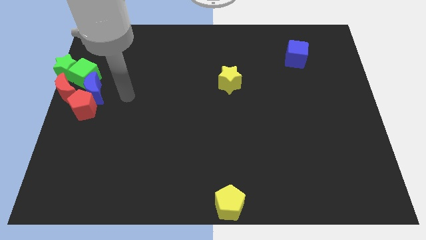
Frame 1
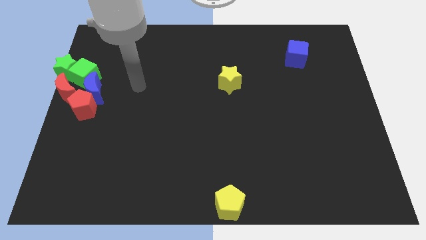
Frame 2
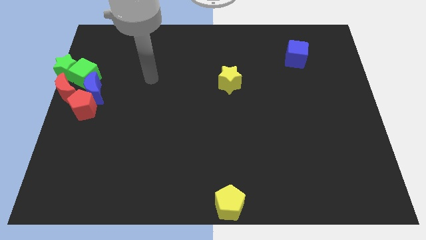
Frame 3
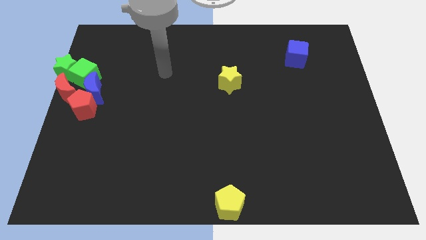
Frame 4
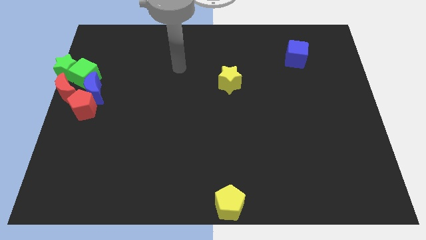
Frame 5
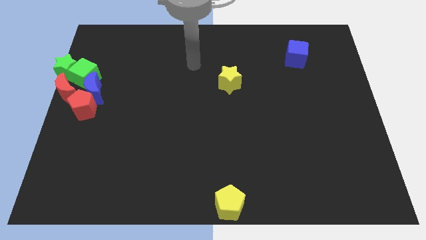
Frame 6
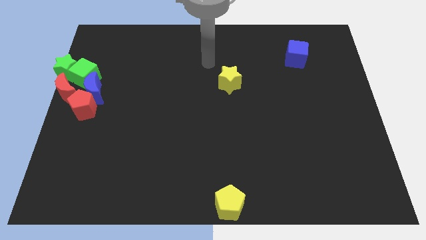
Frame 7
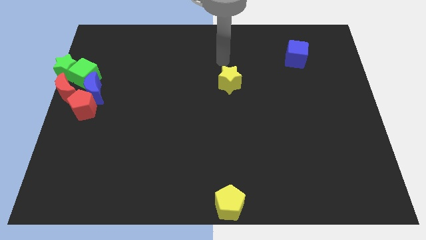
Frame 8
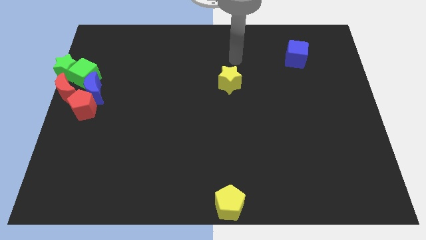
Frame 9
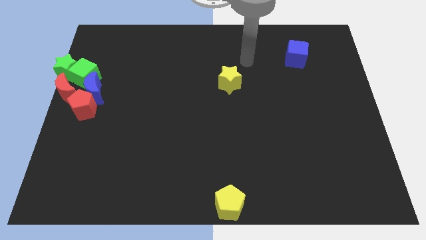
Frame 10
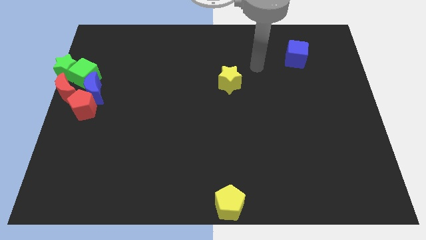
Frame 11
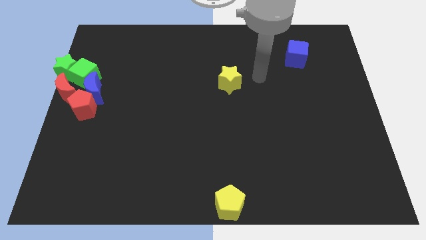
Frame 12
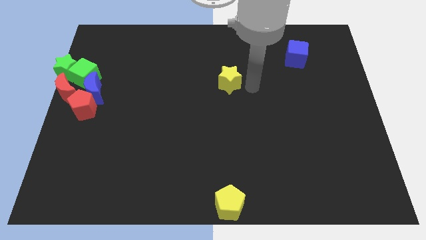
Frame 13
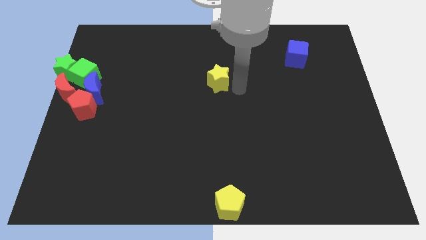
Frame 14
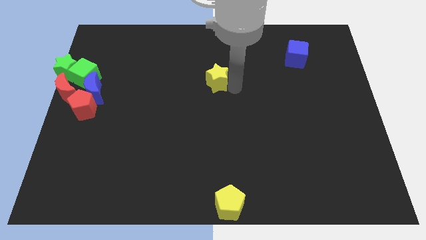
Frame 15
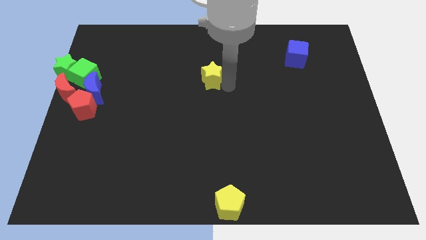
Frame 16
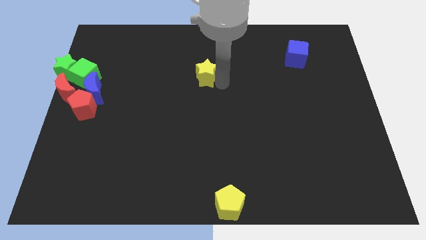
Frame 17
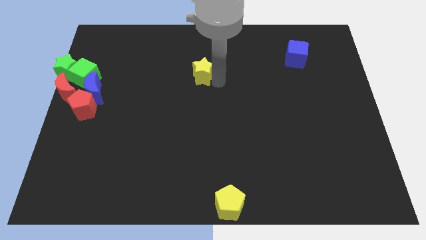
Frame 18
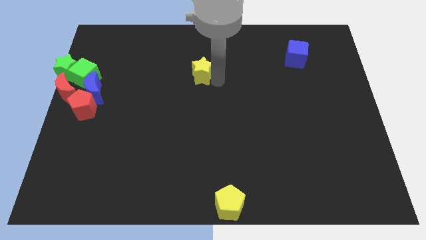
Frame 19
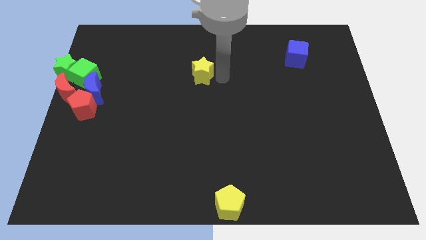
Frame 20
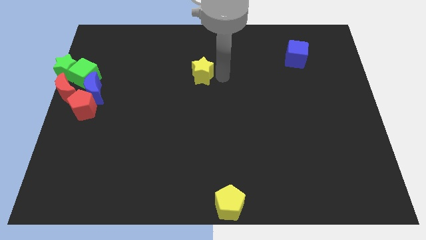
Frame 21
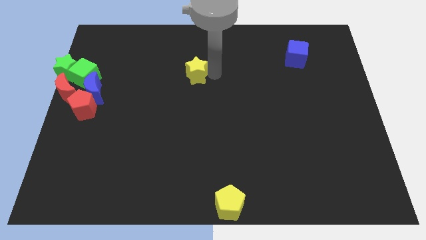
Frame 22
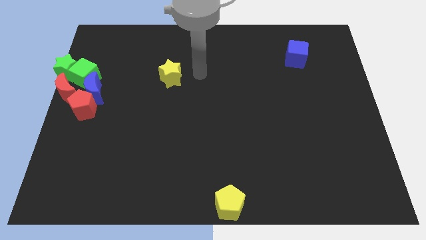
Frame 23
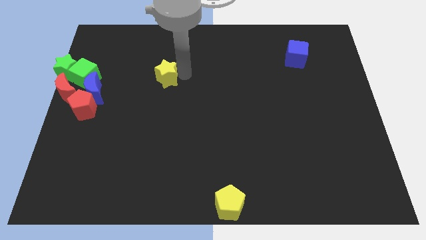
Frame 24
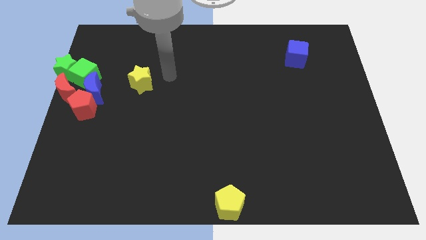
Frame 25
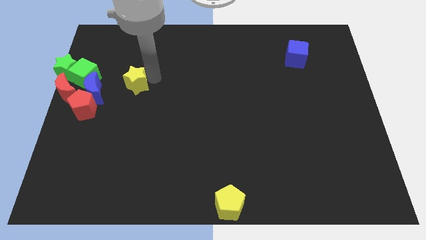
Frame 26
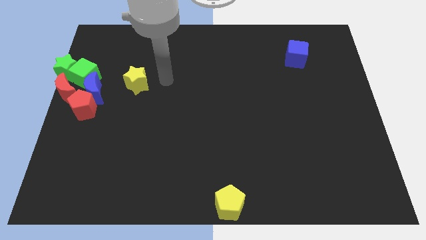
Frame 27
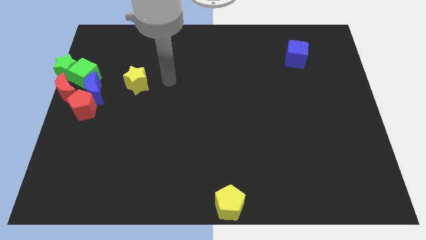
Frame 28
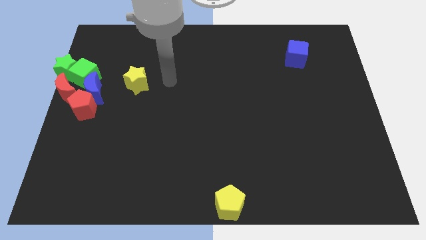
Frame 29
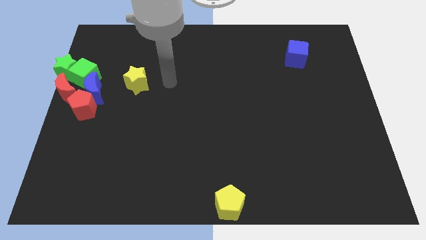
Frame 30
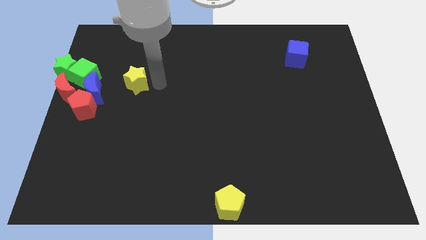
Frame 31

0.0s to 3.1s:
slide the yellow star slightly to the left

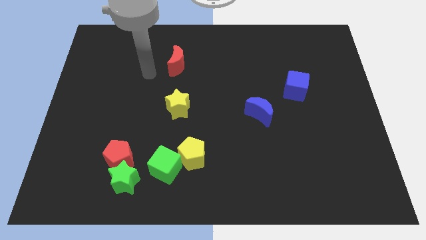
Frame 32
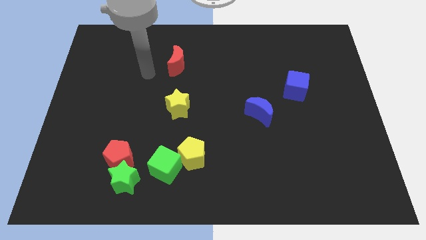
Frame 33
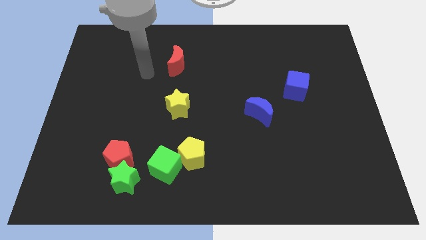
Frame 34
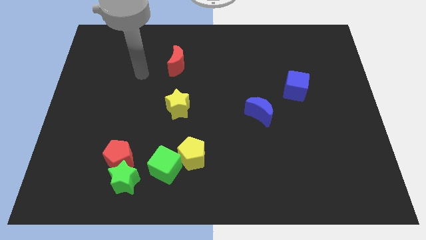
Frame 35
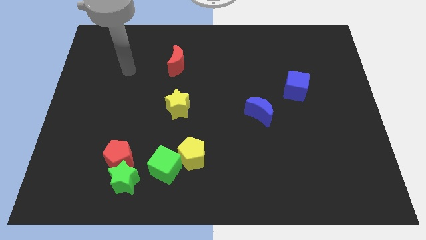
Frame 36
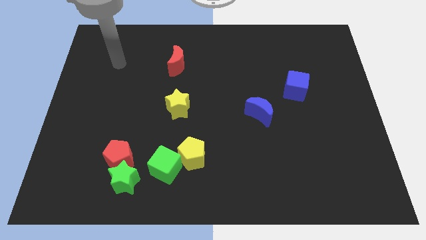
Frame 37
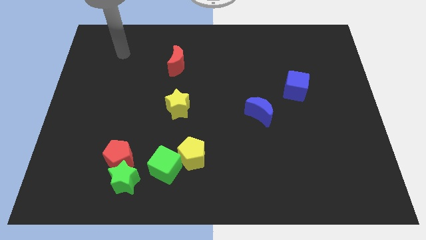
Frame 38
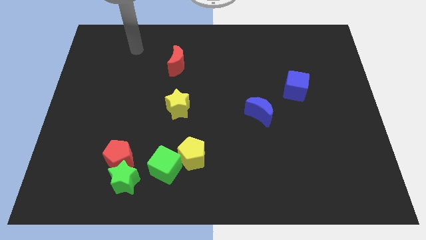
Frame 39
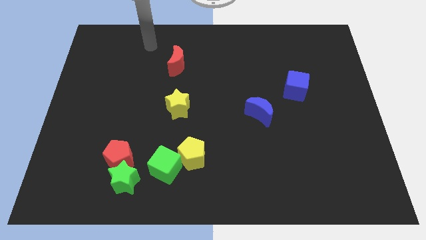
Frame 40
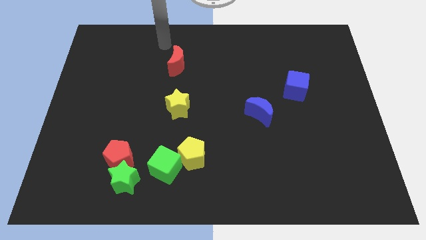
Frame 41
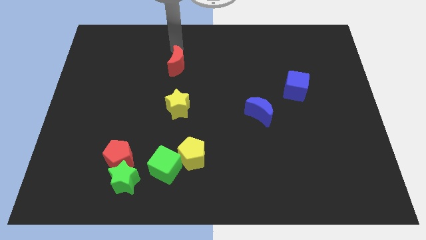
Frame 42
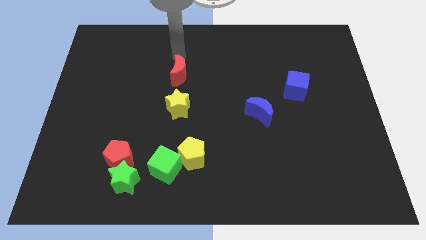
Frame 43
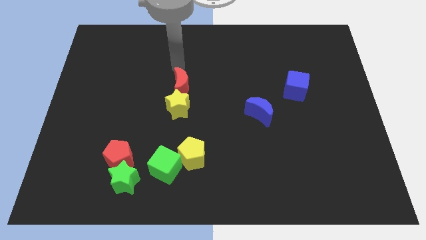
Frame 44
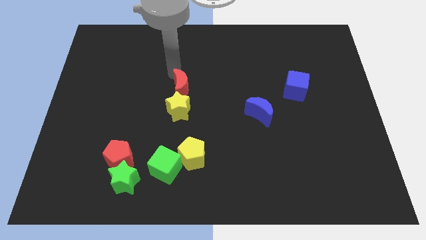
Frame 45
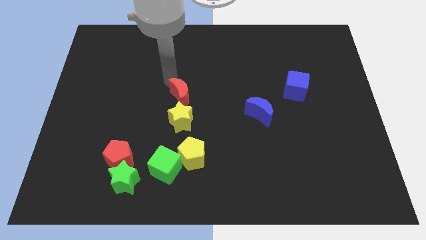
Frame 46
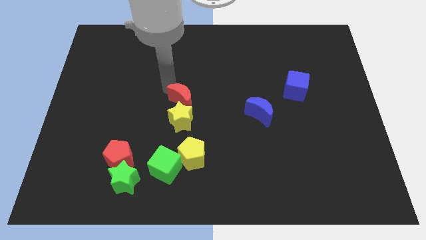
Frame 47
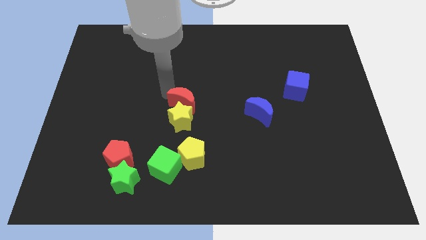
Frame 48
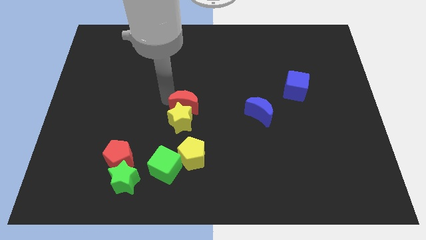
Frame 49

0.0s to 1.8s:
push the red crescent into the yellow star

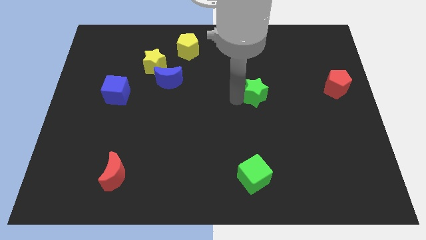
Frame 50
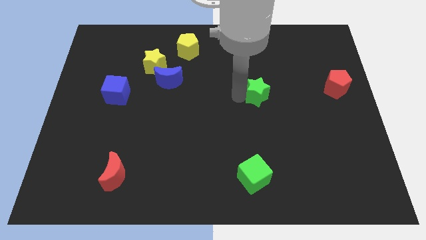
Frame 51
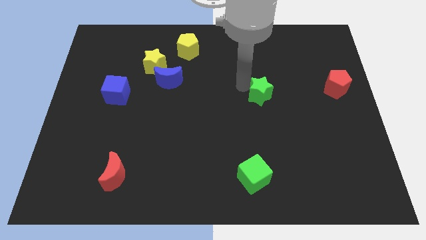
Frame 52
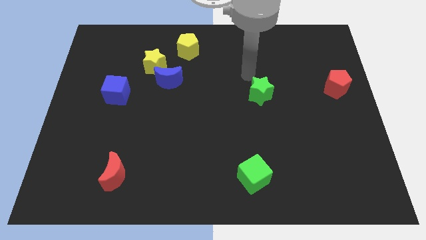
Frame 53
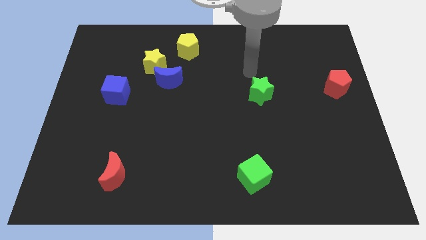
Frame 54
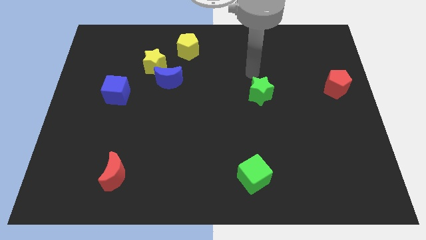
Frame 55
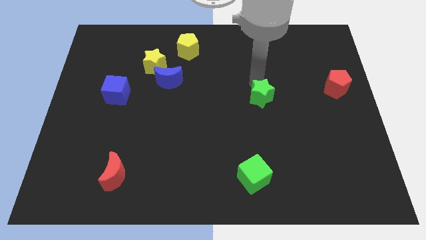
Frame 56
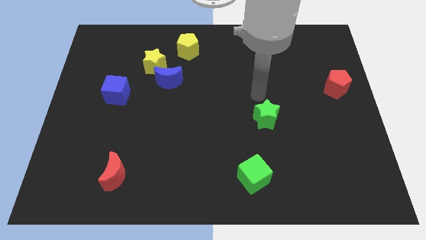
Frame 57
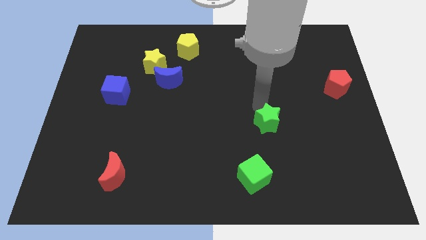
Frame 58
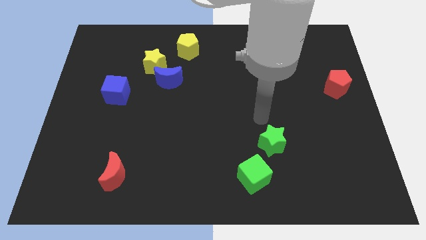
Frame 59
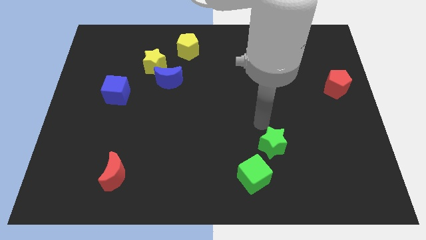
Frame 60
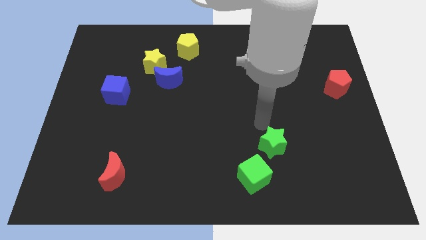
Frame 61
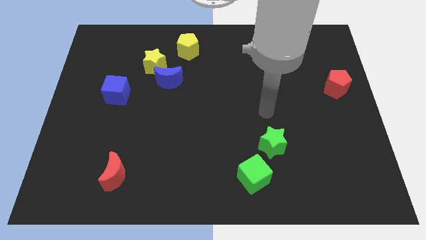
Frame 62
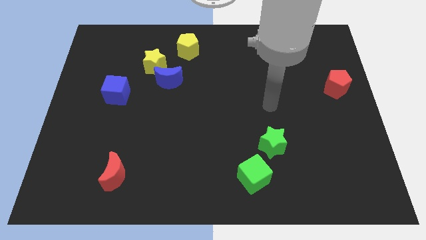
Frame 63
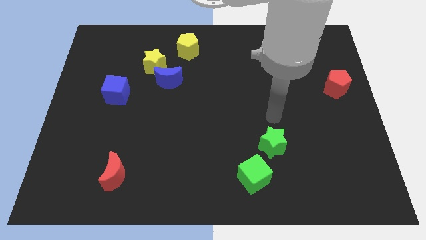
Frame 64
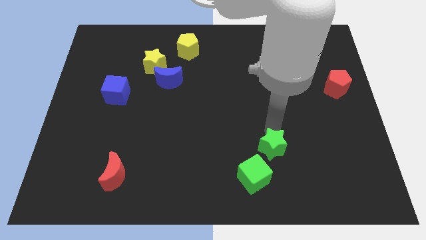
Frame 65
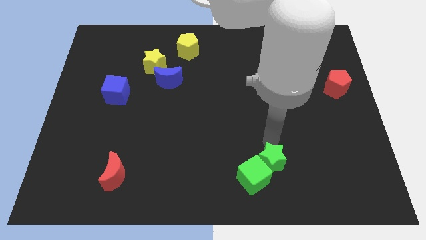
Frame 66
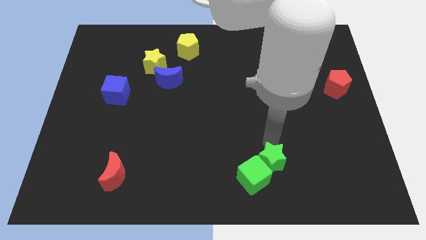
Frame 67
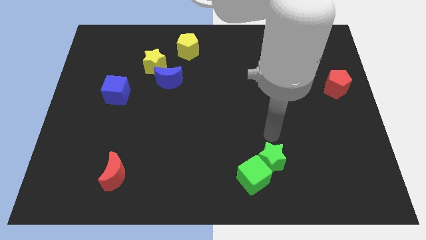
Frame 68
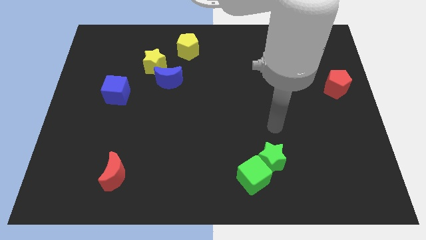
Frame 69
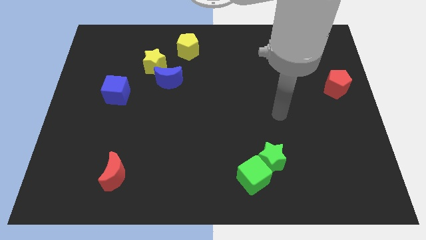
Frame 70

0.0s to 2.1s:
push the green star into green cube

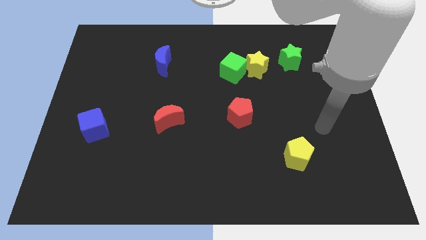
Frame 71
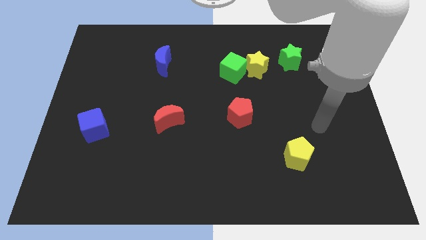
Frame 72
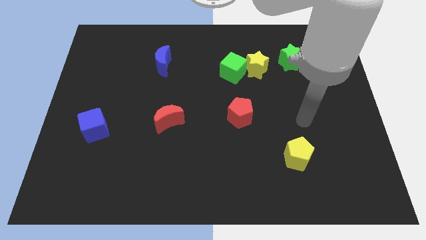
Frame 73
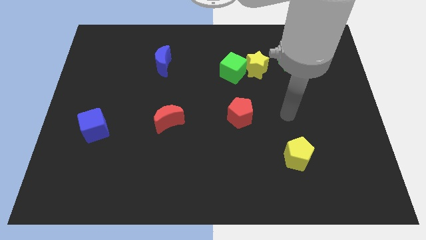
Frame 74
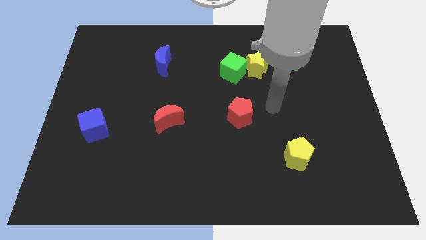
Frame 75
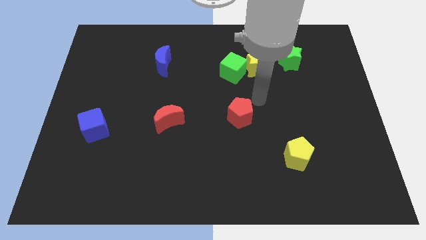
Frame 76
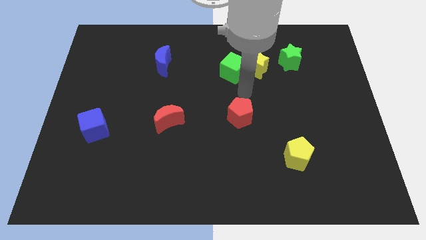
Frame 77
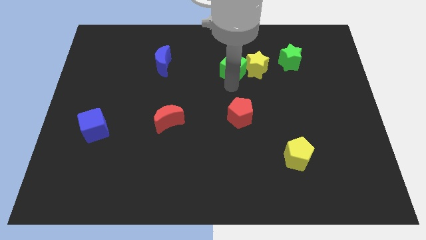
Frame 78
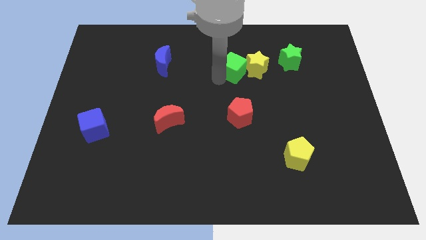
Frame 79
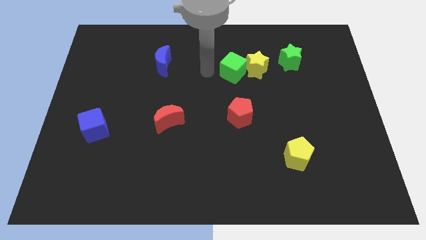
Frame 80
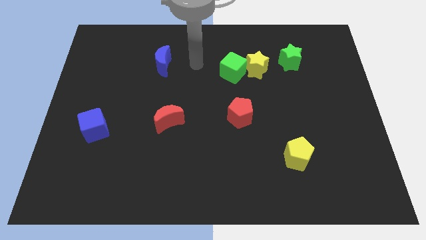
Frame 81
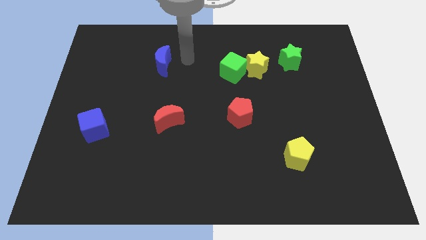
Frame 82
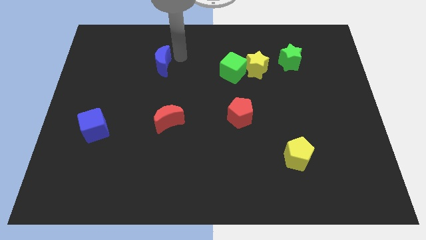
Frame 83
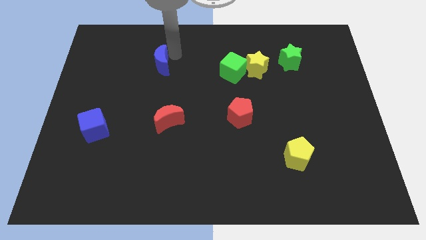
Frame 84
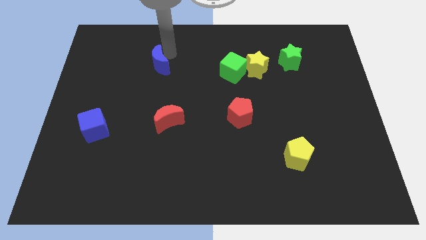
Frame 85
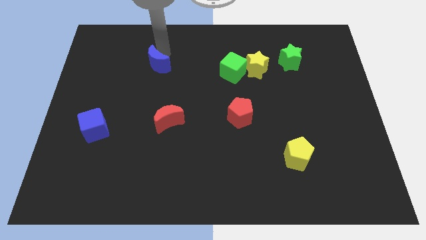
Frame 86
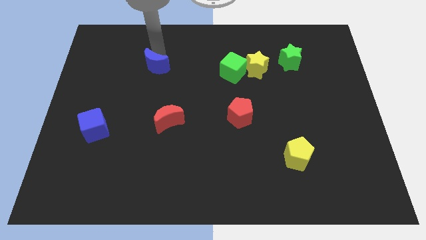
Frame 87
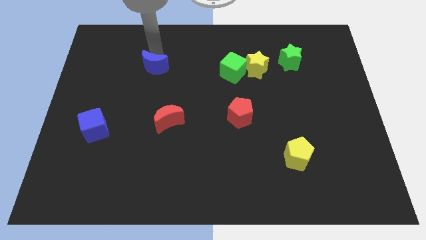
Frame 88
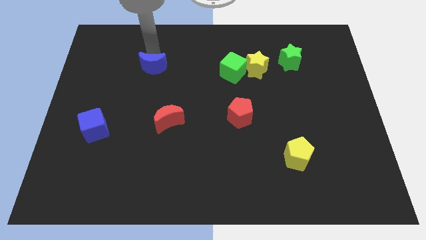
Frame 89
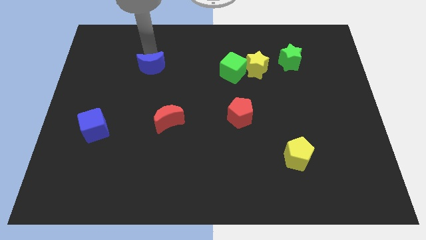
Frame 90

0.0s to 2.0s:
slightly push the blue moon to the bottom
